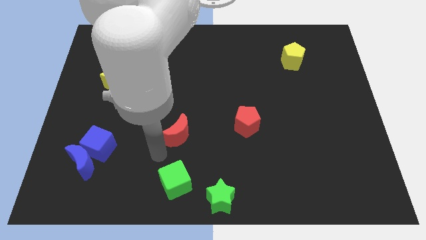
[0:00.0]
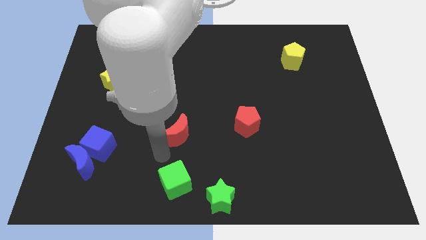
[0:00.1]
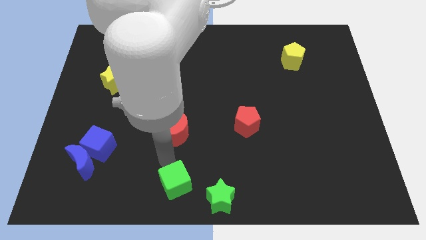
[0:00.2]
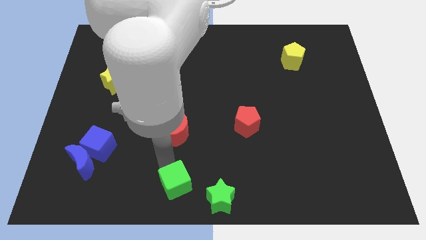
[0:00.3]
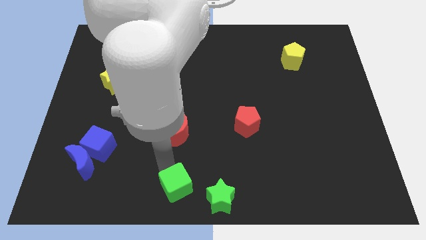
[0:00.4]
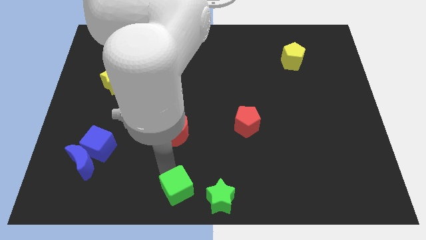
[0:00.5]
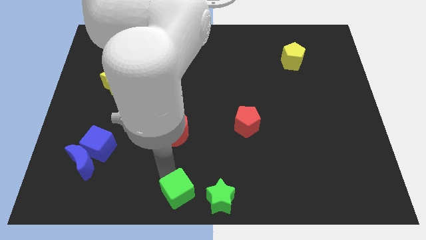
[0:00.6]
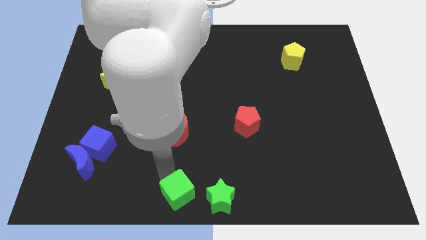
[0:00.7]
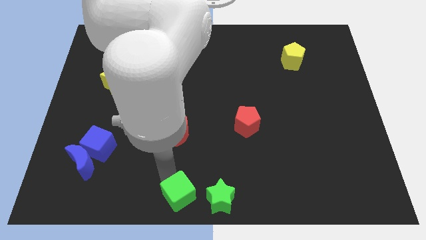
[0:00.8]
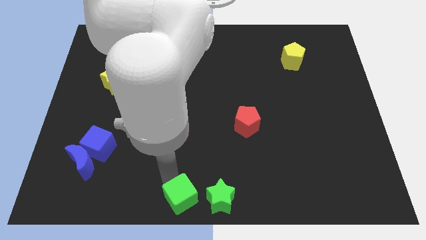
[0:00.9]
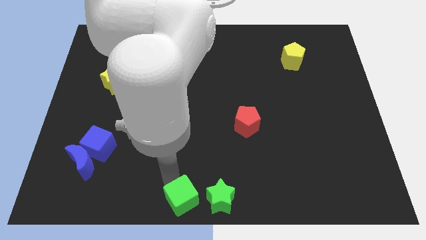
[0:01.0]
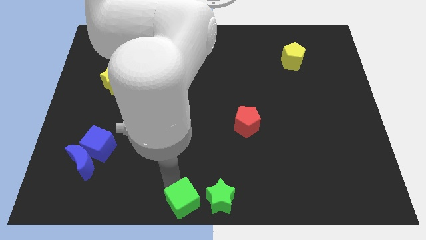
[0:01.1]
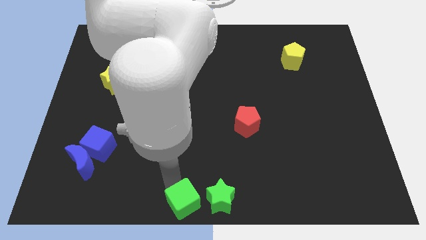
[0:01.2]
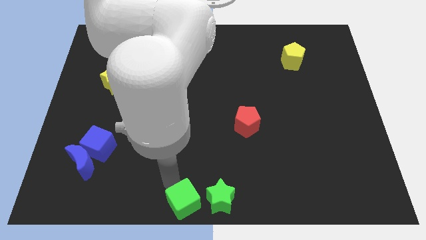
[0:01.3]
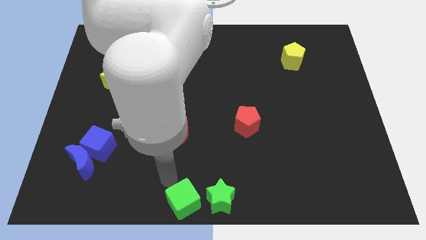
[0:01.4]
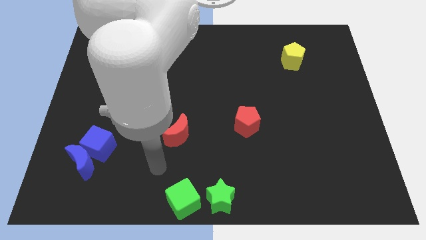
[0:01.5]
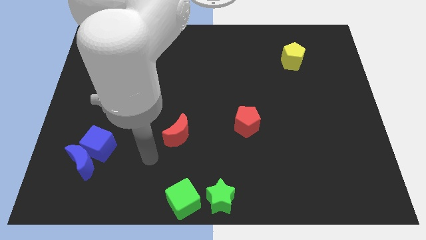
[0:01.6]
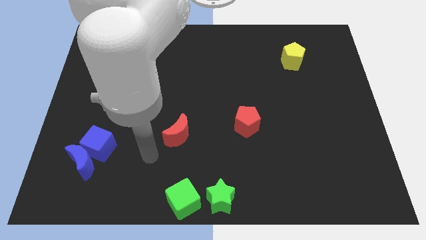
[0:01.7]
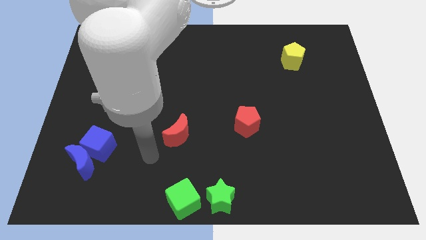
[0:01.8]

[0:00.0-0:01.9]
push the green cube to the left side of the green star

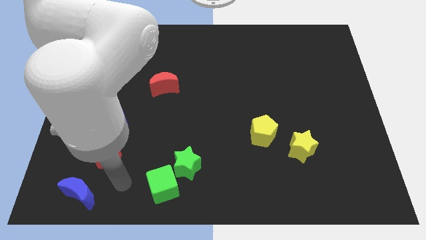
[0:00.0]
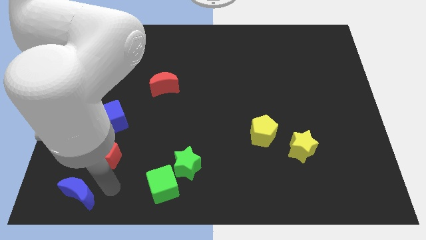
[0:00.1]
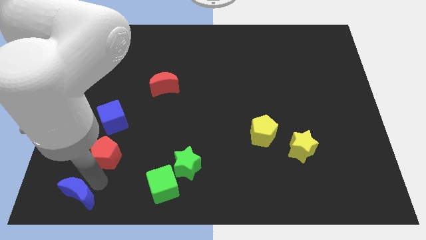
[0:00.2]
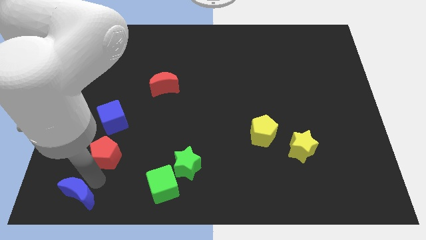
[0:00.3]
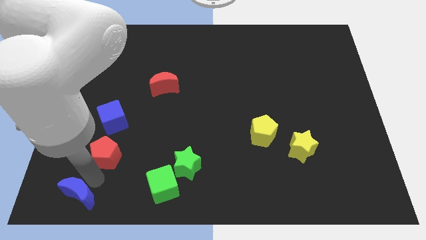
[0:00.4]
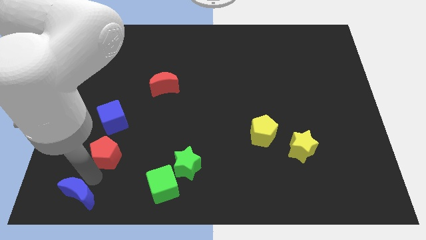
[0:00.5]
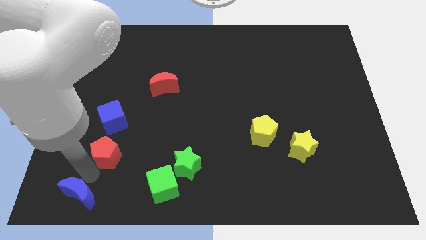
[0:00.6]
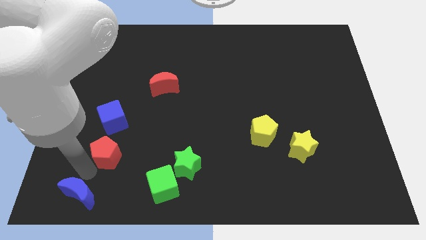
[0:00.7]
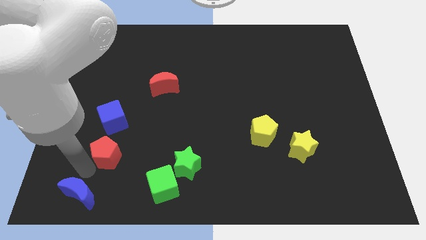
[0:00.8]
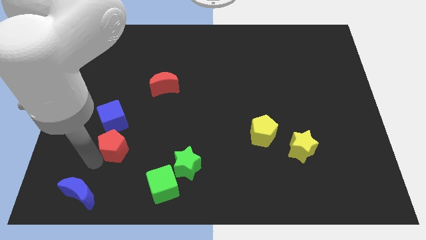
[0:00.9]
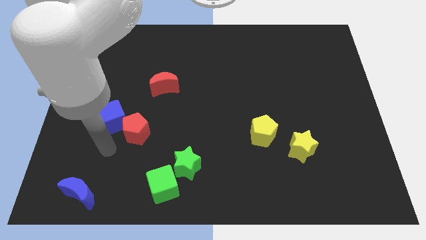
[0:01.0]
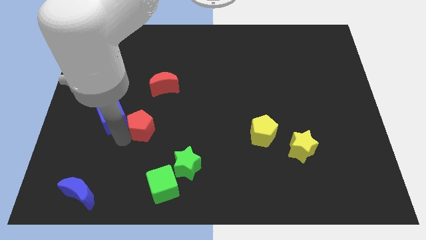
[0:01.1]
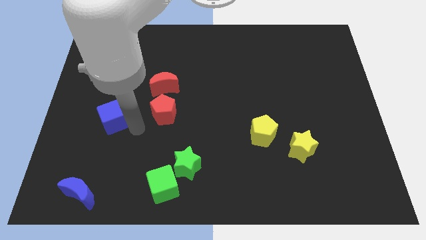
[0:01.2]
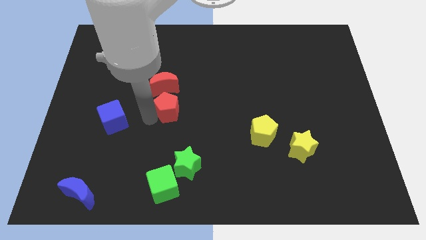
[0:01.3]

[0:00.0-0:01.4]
place the red pentagon at the bottom side of the red moon

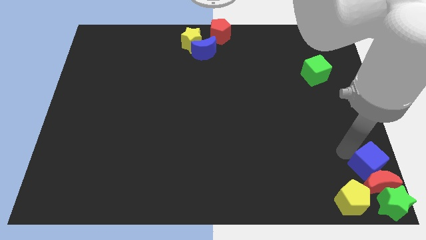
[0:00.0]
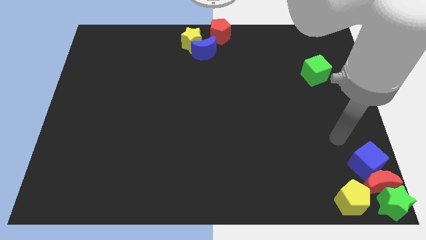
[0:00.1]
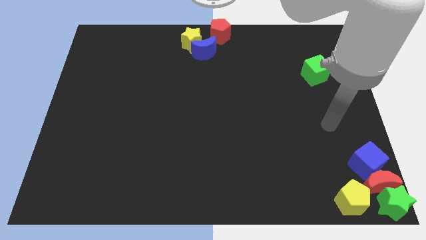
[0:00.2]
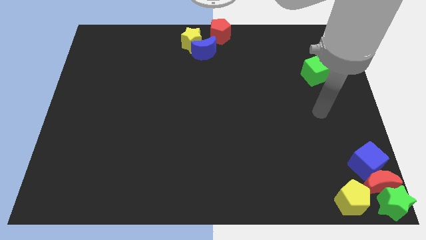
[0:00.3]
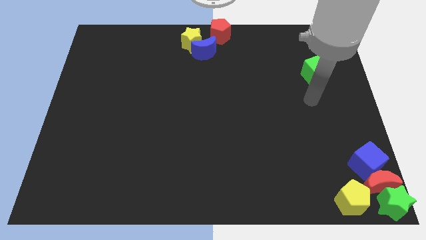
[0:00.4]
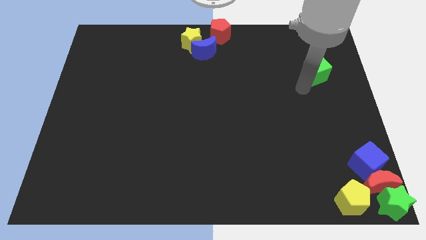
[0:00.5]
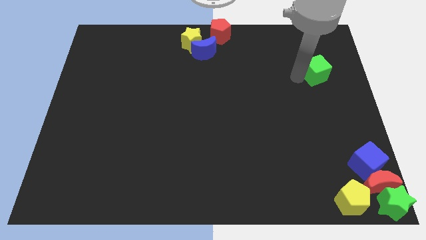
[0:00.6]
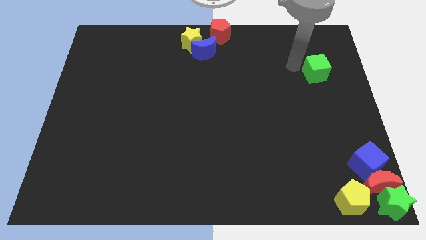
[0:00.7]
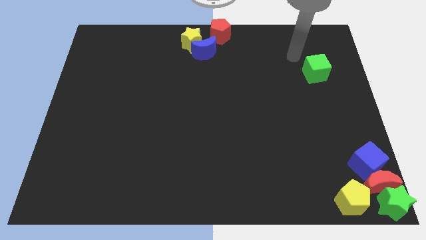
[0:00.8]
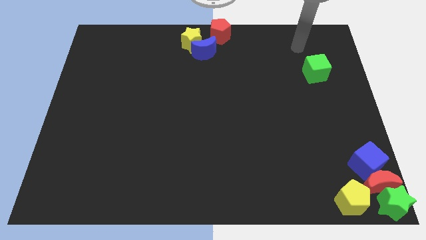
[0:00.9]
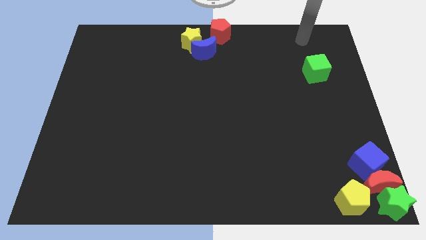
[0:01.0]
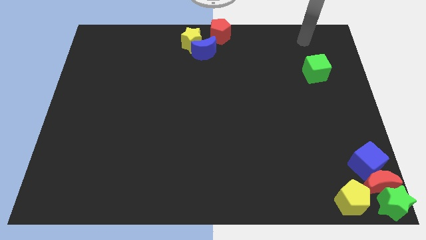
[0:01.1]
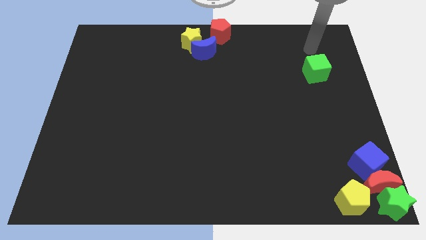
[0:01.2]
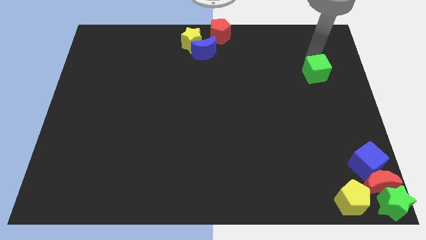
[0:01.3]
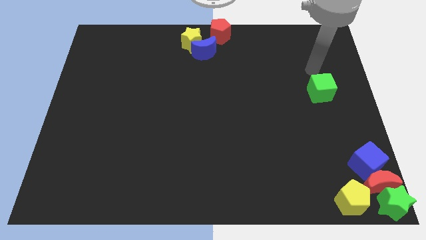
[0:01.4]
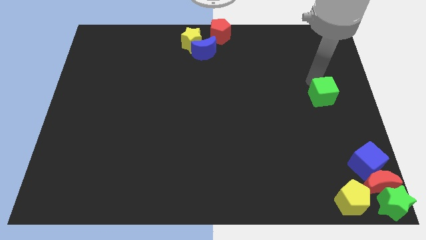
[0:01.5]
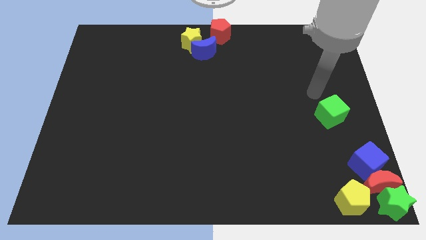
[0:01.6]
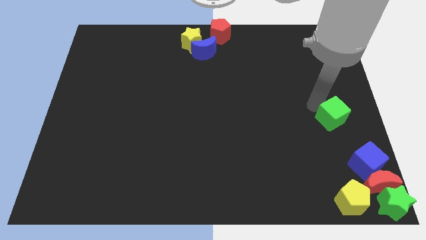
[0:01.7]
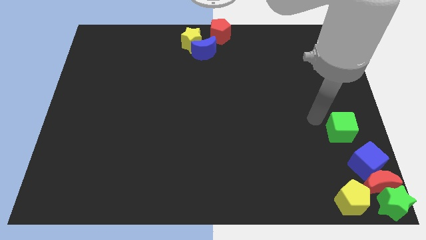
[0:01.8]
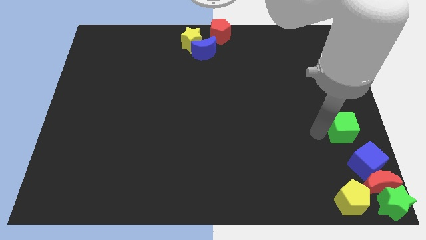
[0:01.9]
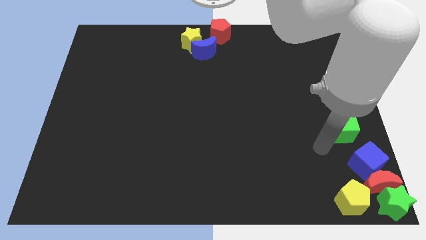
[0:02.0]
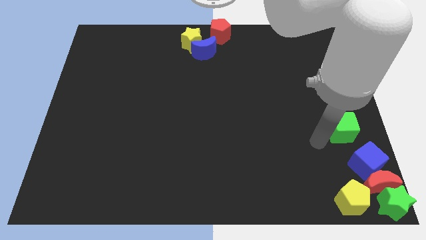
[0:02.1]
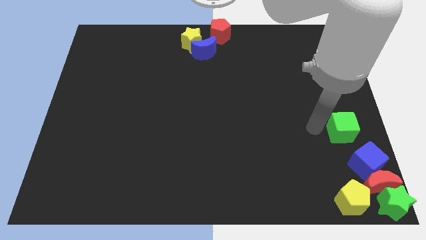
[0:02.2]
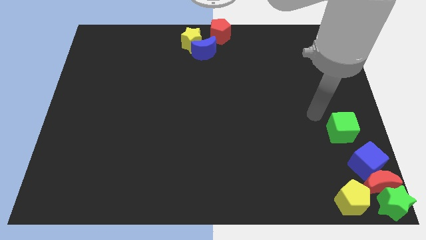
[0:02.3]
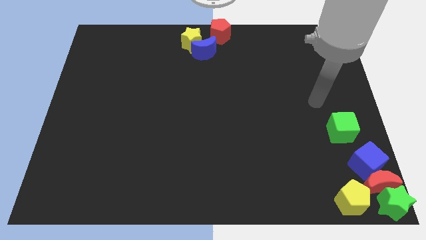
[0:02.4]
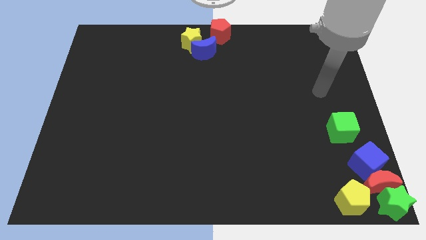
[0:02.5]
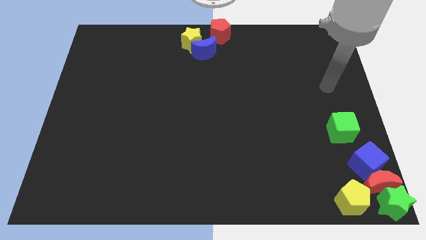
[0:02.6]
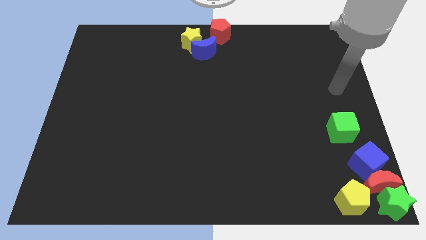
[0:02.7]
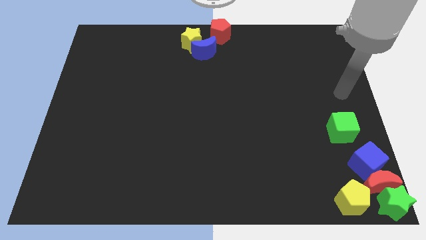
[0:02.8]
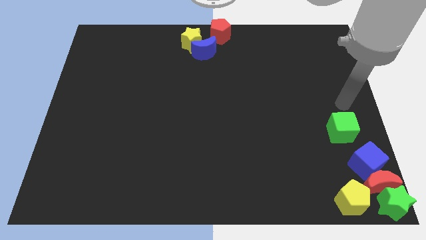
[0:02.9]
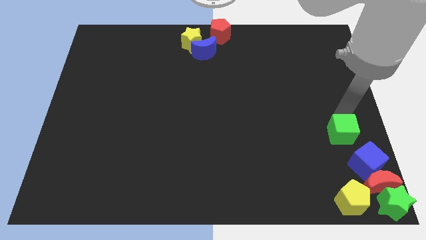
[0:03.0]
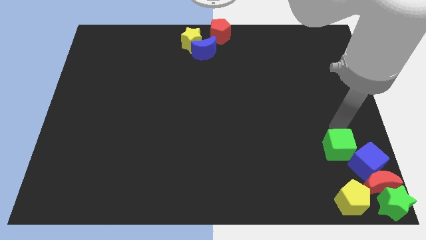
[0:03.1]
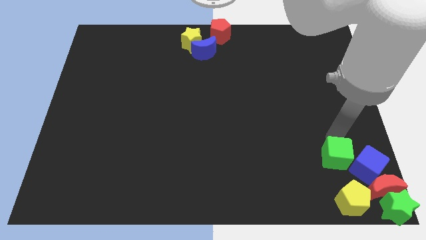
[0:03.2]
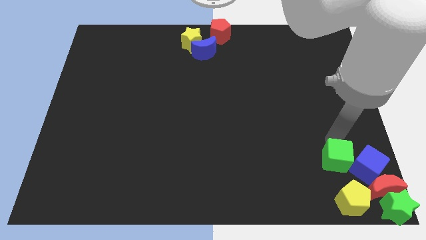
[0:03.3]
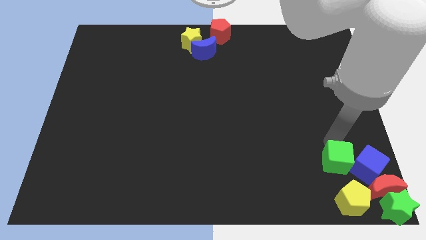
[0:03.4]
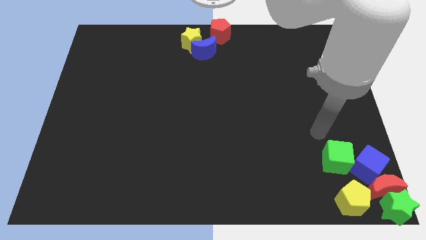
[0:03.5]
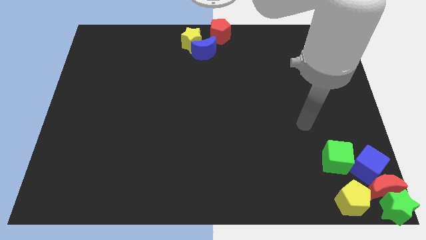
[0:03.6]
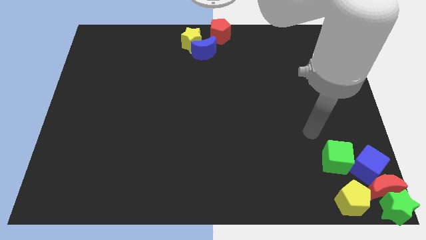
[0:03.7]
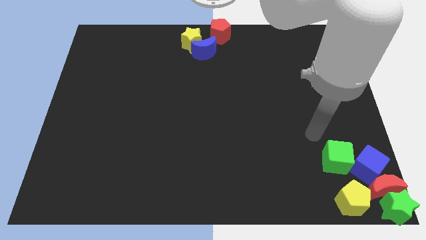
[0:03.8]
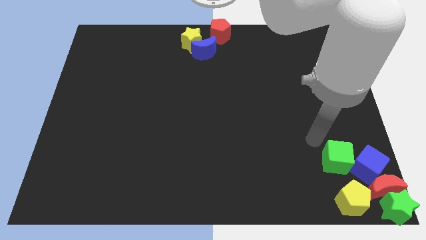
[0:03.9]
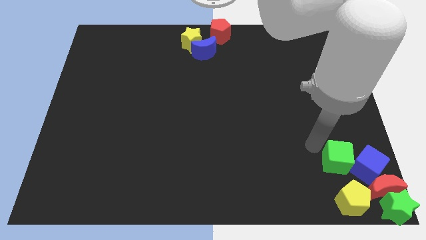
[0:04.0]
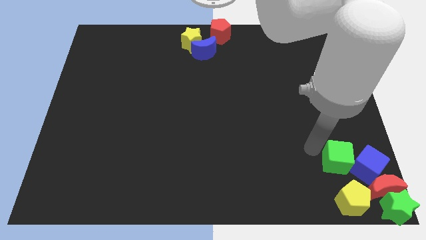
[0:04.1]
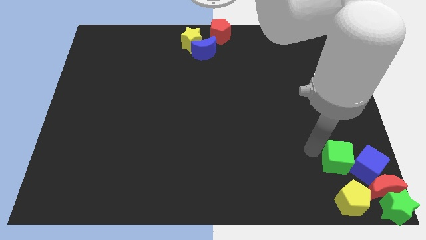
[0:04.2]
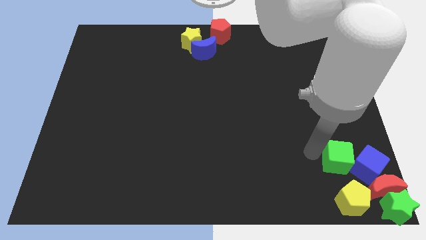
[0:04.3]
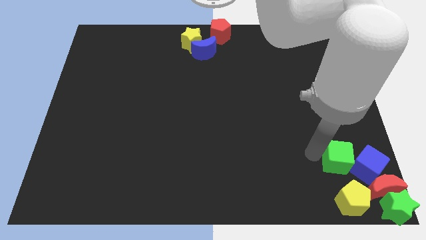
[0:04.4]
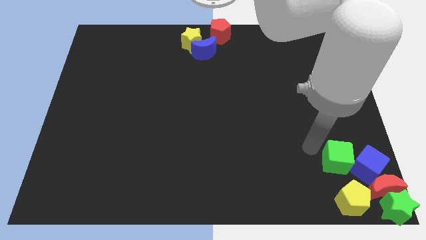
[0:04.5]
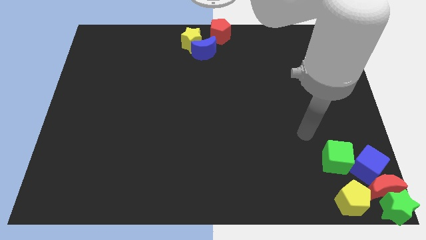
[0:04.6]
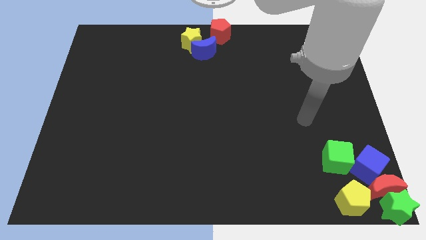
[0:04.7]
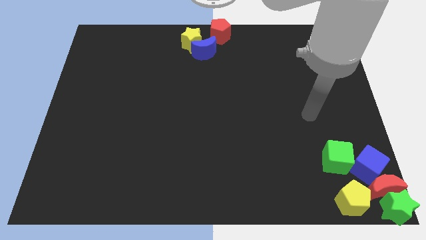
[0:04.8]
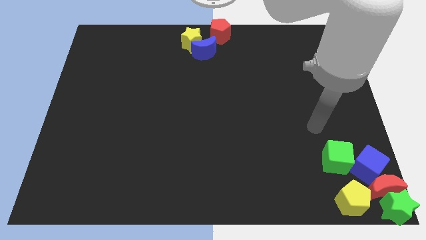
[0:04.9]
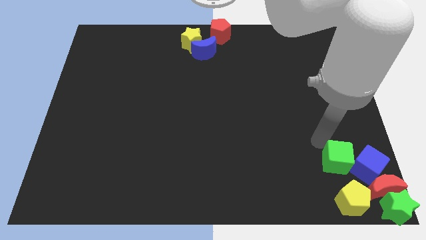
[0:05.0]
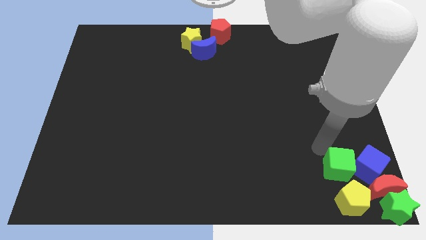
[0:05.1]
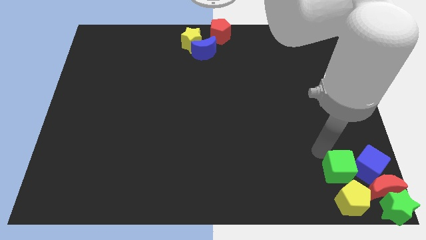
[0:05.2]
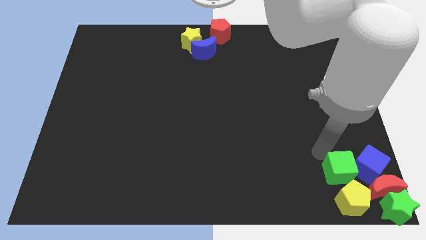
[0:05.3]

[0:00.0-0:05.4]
move the green cube into the blue cube

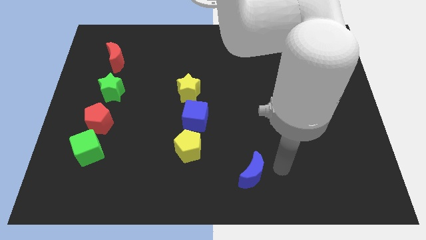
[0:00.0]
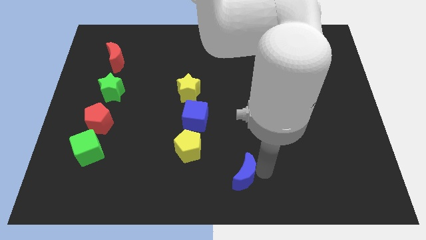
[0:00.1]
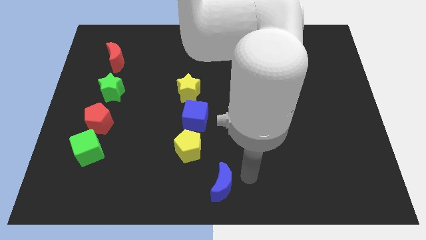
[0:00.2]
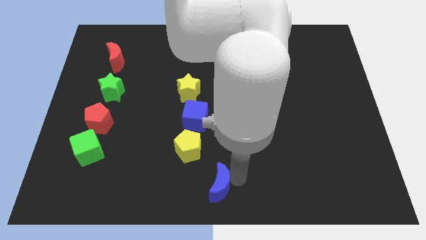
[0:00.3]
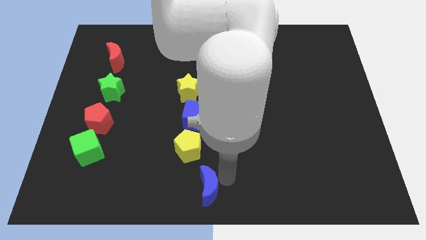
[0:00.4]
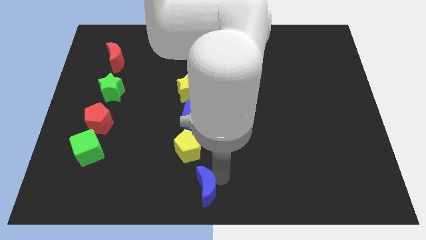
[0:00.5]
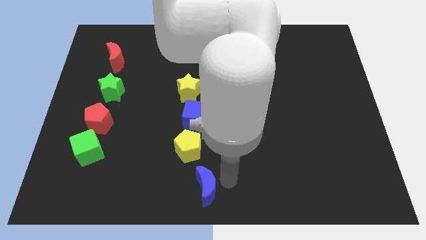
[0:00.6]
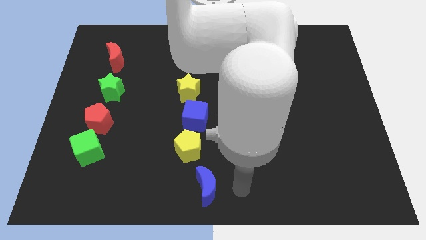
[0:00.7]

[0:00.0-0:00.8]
push the blue crescent towards the bottom center of the board
